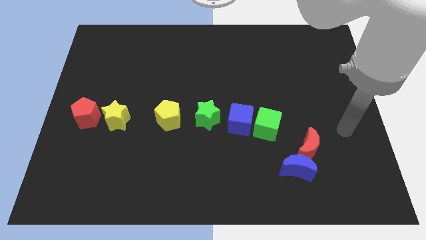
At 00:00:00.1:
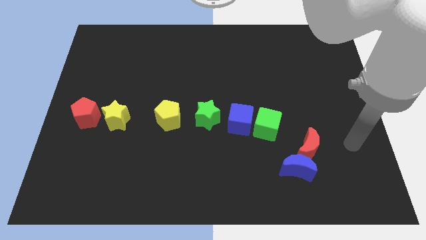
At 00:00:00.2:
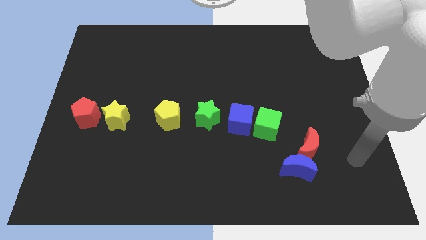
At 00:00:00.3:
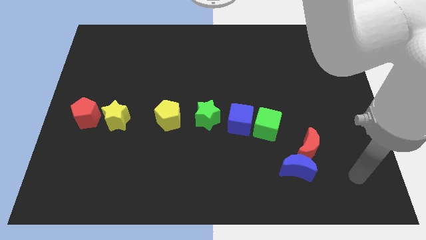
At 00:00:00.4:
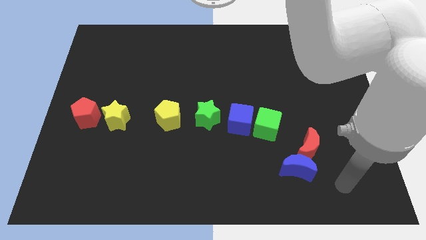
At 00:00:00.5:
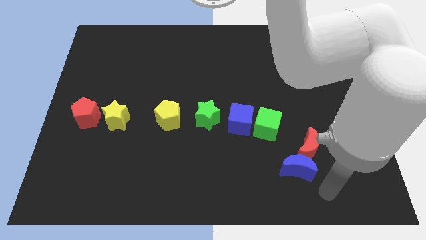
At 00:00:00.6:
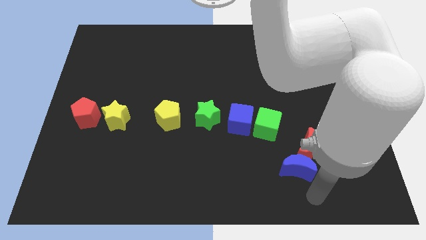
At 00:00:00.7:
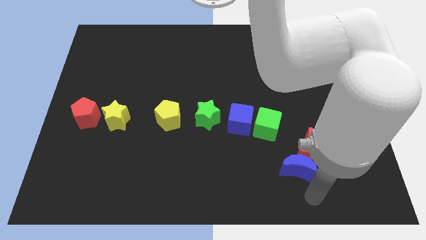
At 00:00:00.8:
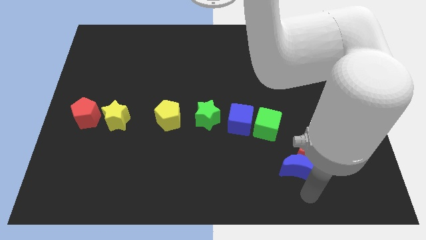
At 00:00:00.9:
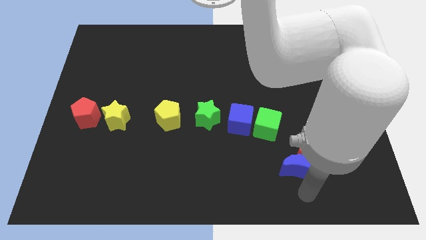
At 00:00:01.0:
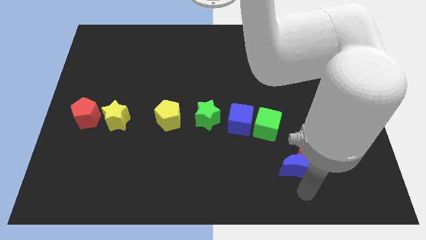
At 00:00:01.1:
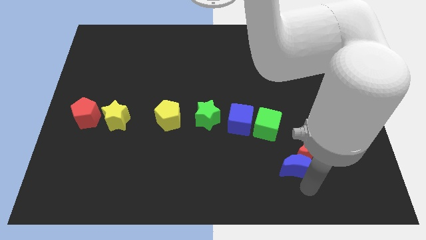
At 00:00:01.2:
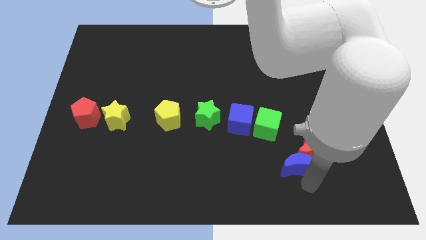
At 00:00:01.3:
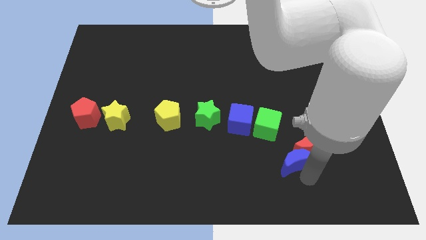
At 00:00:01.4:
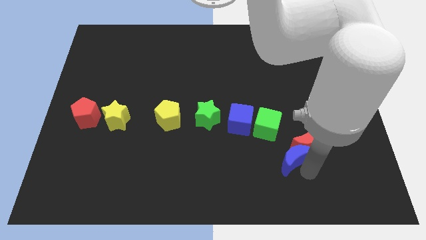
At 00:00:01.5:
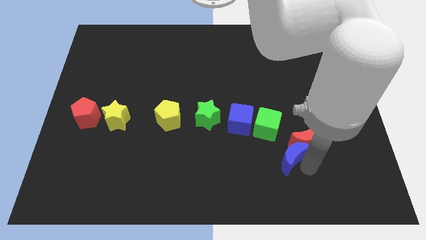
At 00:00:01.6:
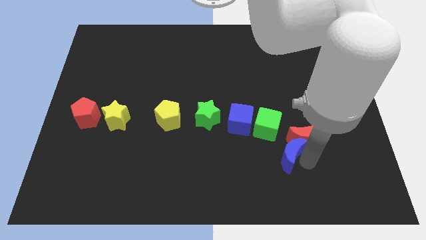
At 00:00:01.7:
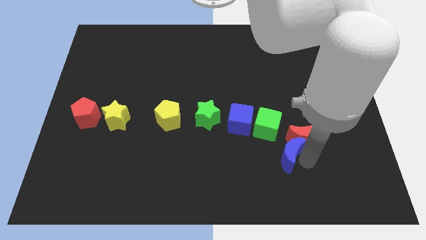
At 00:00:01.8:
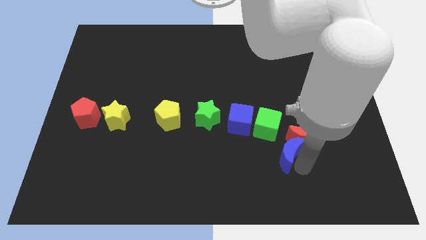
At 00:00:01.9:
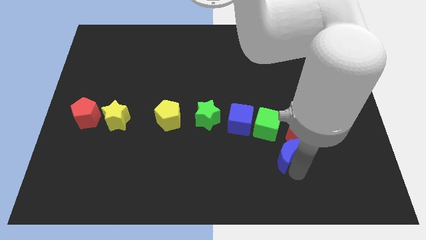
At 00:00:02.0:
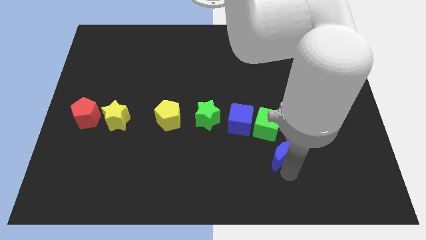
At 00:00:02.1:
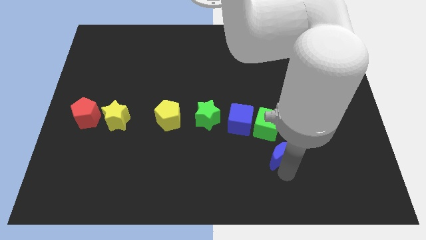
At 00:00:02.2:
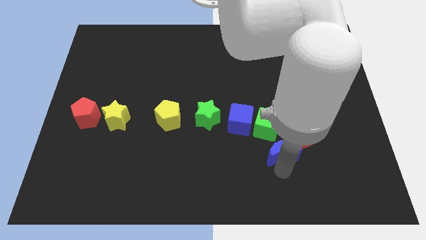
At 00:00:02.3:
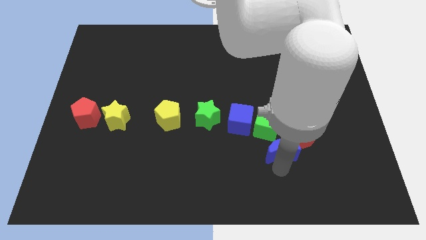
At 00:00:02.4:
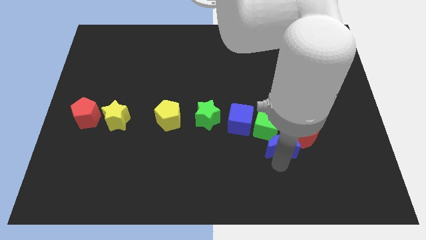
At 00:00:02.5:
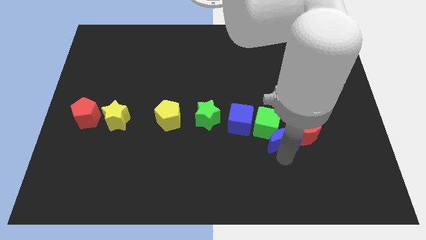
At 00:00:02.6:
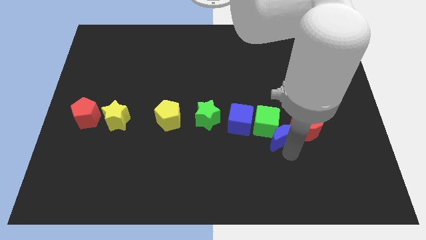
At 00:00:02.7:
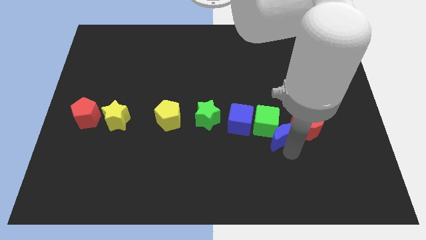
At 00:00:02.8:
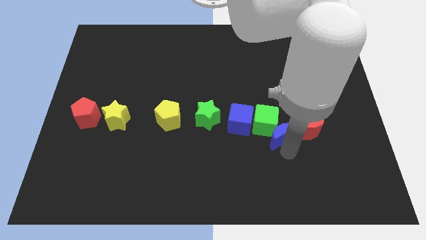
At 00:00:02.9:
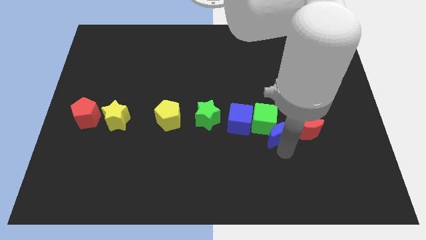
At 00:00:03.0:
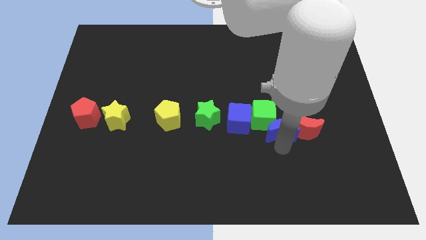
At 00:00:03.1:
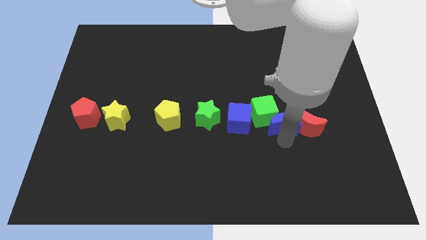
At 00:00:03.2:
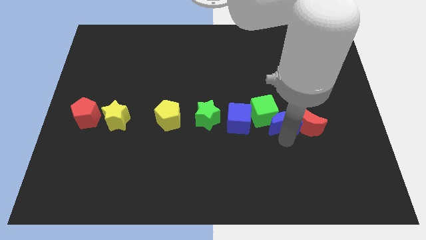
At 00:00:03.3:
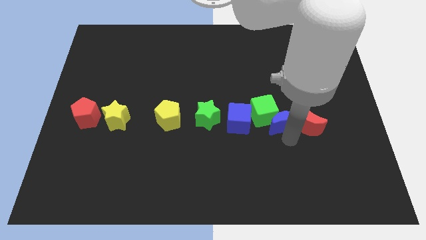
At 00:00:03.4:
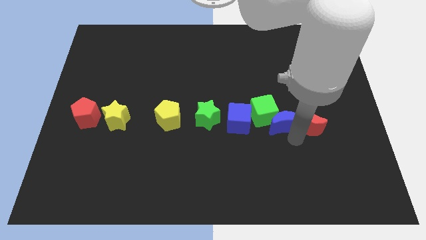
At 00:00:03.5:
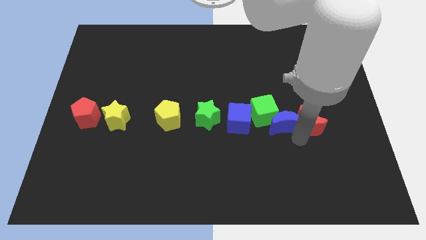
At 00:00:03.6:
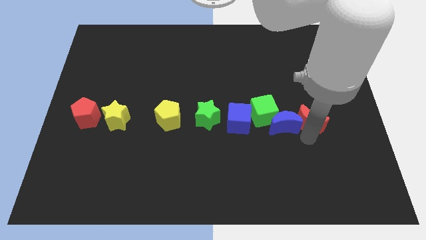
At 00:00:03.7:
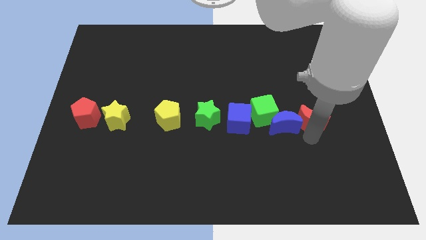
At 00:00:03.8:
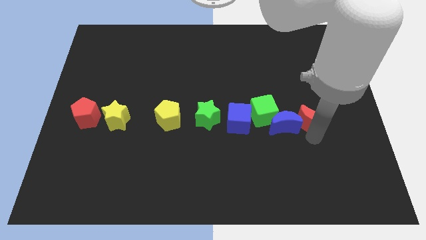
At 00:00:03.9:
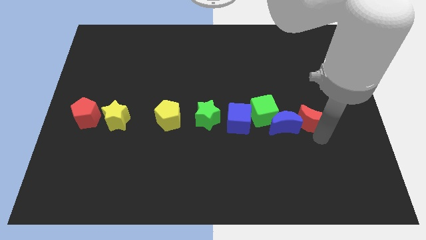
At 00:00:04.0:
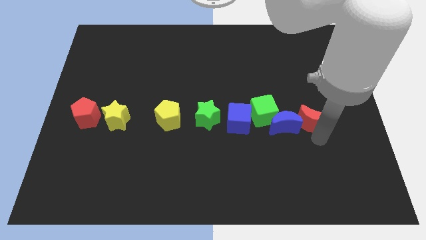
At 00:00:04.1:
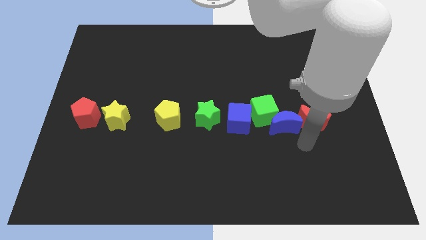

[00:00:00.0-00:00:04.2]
push the blue crescent into the green cube

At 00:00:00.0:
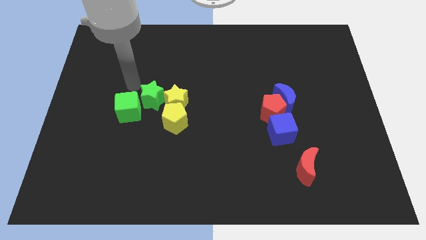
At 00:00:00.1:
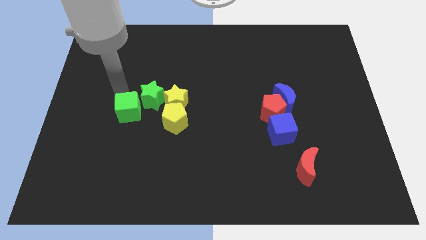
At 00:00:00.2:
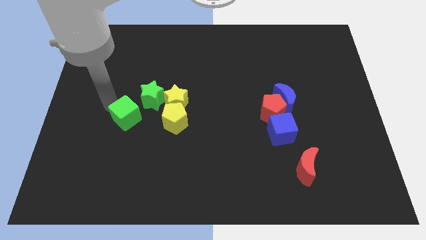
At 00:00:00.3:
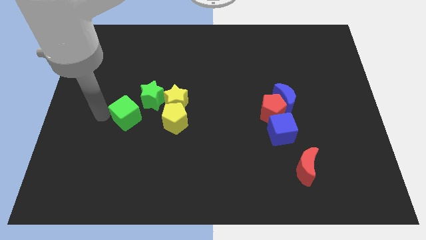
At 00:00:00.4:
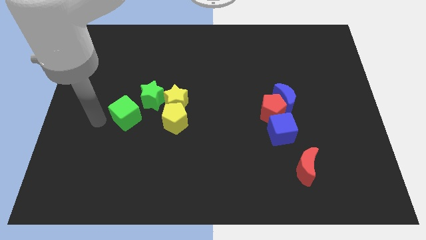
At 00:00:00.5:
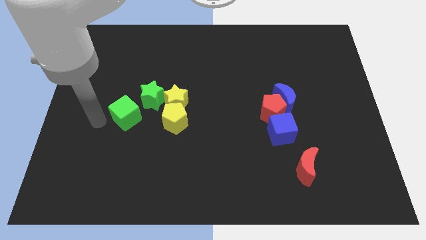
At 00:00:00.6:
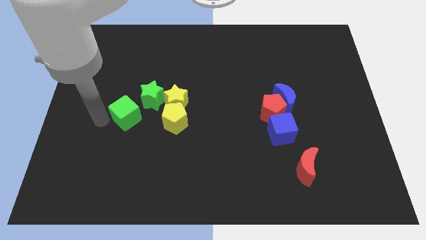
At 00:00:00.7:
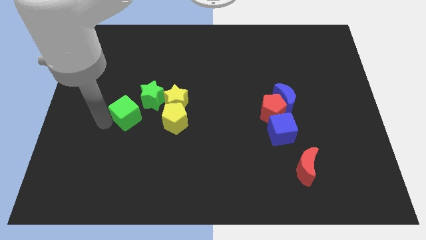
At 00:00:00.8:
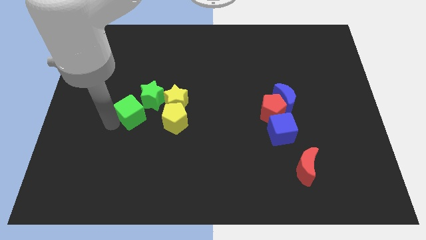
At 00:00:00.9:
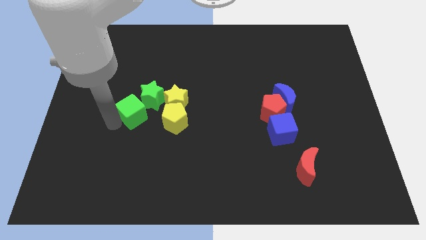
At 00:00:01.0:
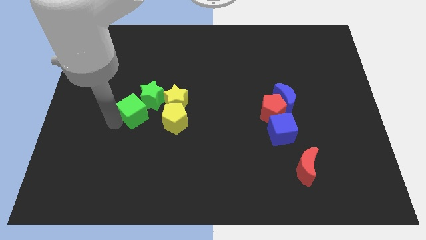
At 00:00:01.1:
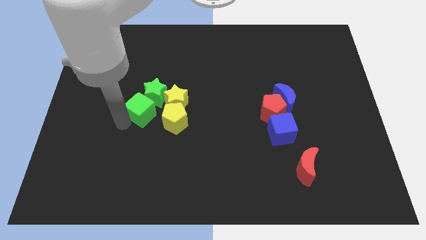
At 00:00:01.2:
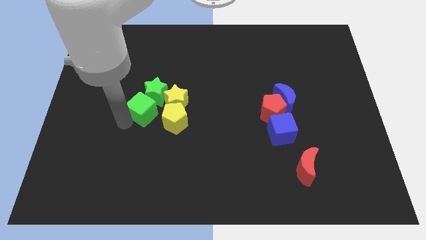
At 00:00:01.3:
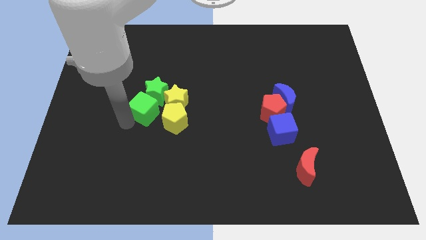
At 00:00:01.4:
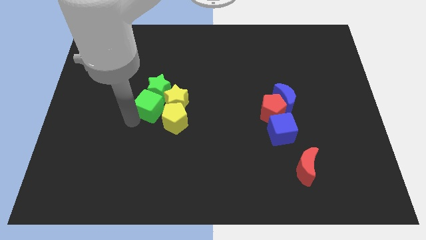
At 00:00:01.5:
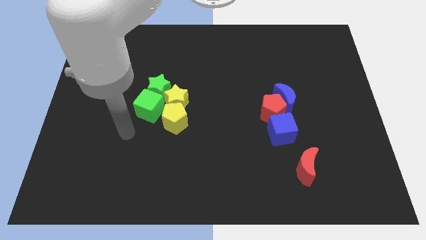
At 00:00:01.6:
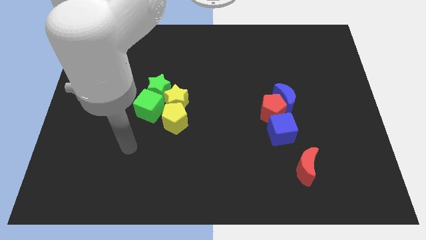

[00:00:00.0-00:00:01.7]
push green cube into the green star

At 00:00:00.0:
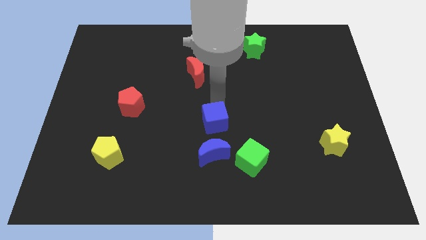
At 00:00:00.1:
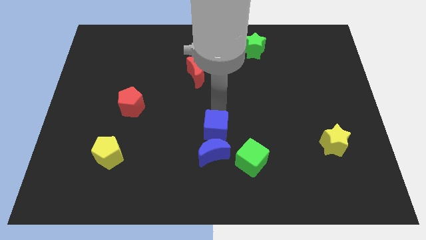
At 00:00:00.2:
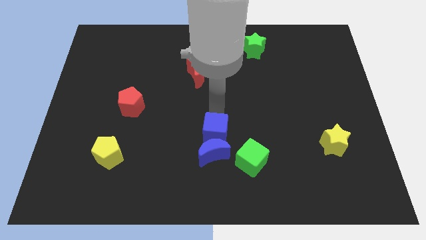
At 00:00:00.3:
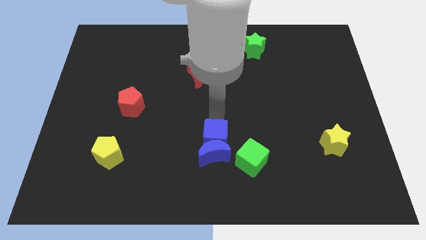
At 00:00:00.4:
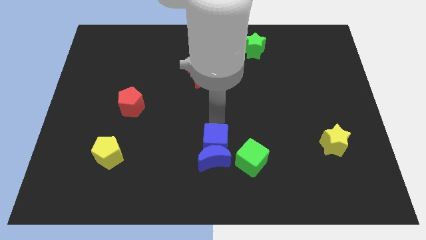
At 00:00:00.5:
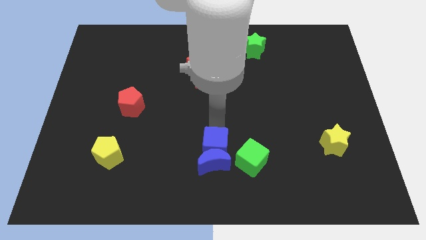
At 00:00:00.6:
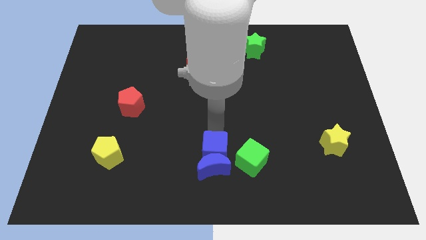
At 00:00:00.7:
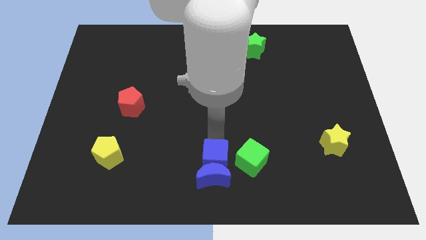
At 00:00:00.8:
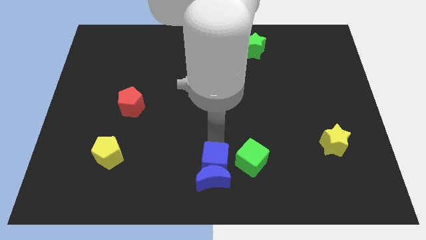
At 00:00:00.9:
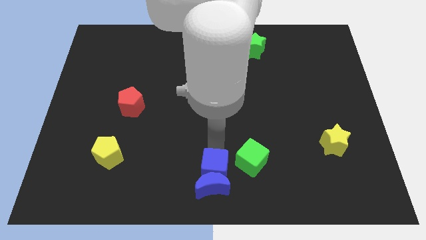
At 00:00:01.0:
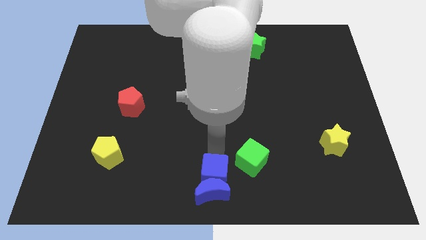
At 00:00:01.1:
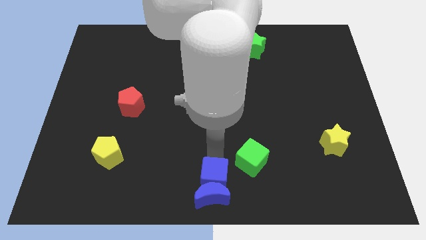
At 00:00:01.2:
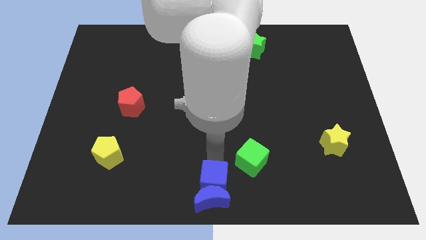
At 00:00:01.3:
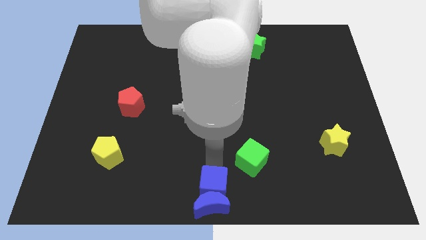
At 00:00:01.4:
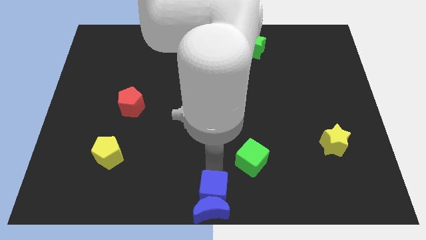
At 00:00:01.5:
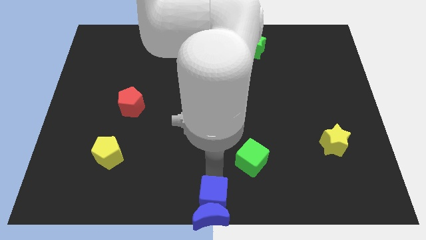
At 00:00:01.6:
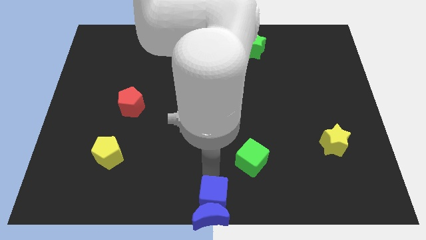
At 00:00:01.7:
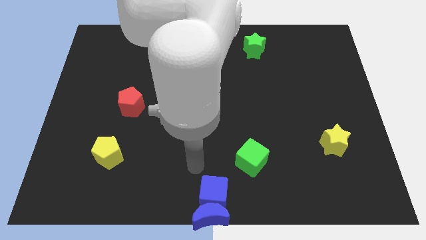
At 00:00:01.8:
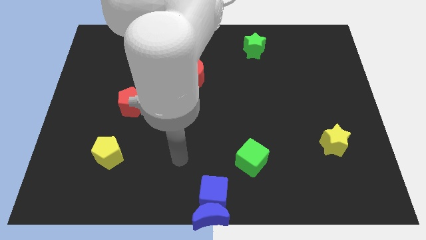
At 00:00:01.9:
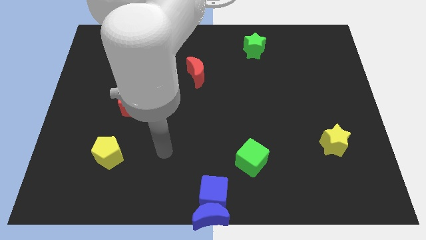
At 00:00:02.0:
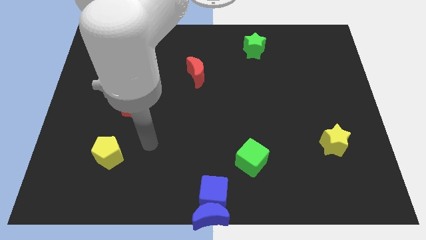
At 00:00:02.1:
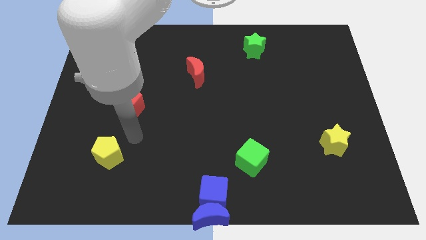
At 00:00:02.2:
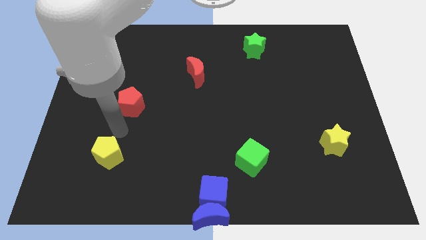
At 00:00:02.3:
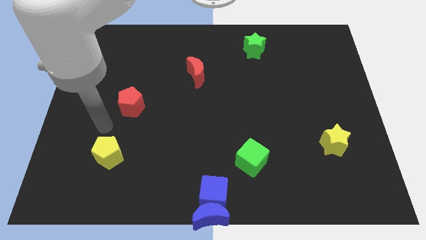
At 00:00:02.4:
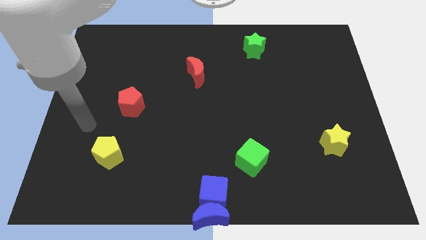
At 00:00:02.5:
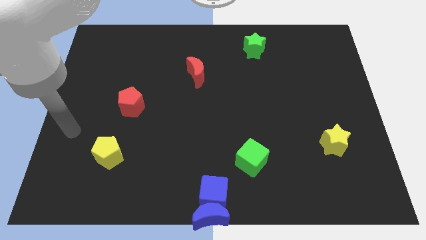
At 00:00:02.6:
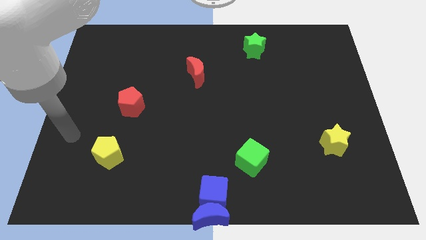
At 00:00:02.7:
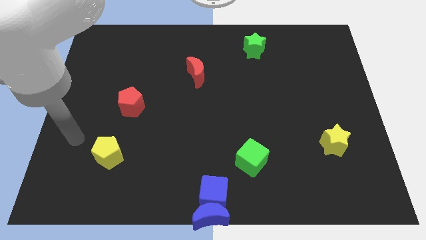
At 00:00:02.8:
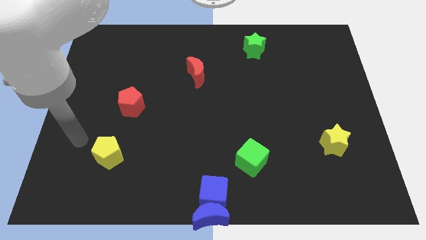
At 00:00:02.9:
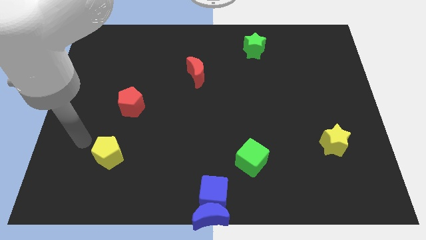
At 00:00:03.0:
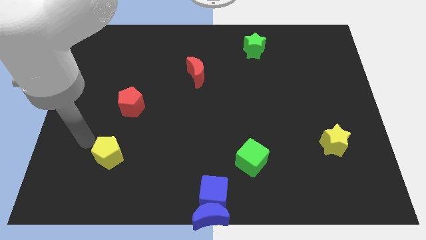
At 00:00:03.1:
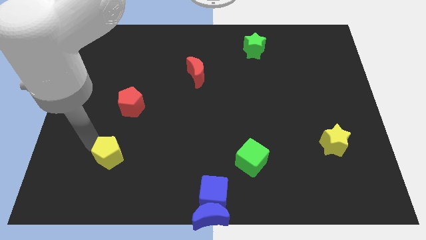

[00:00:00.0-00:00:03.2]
move the arm at the top left side of the yellow pentagon
